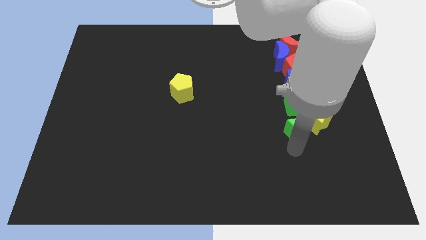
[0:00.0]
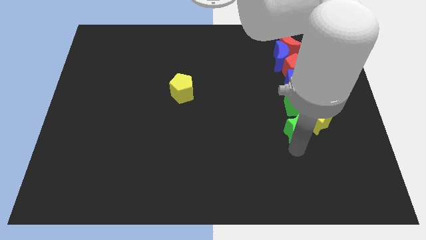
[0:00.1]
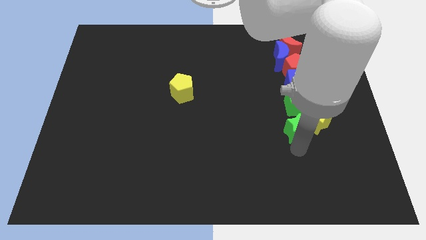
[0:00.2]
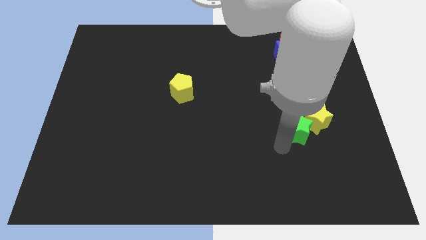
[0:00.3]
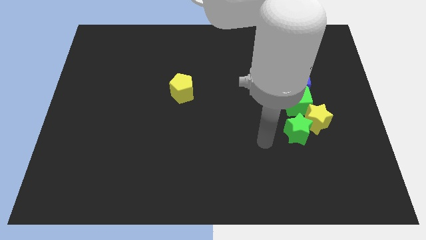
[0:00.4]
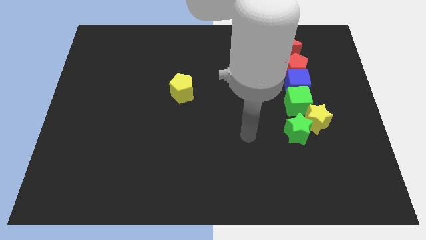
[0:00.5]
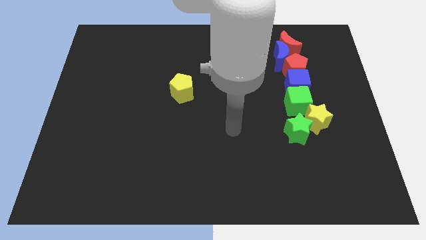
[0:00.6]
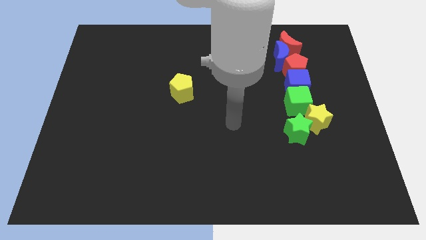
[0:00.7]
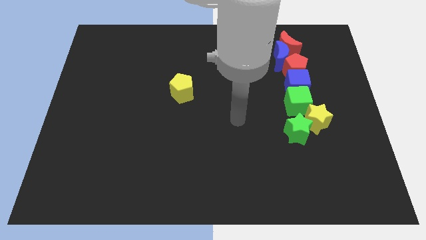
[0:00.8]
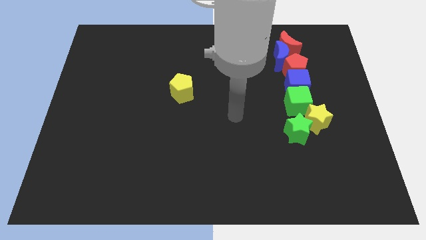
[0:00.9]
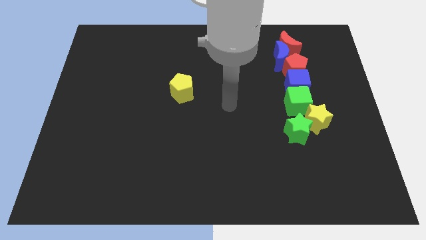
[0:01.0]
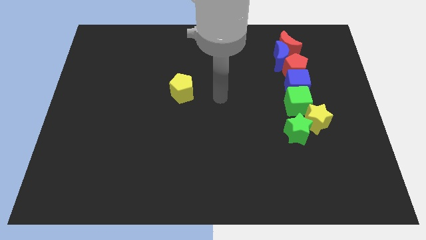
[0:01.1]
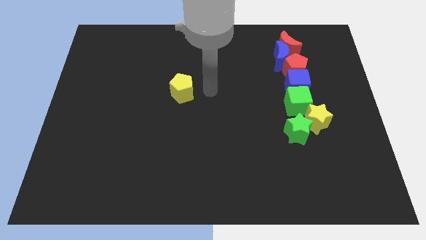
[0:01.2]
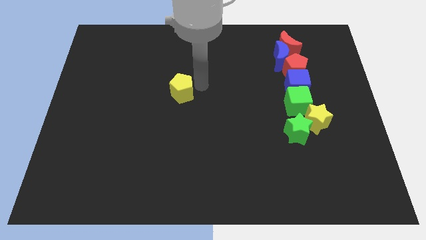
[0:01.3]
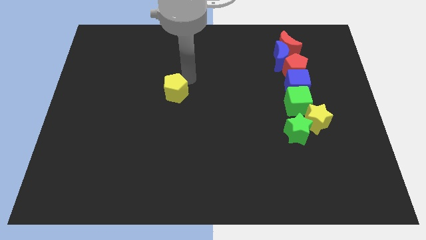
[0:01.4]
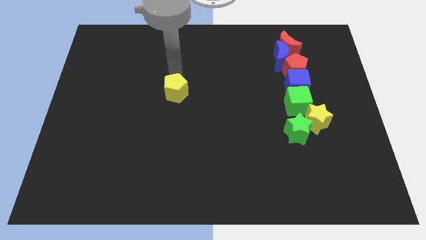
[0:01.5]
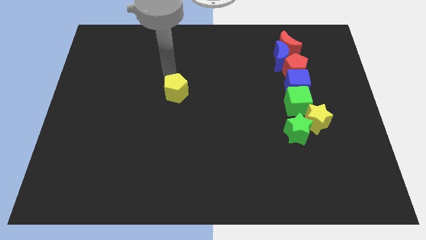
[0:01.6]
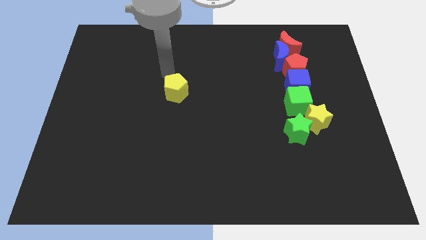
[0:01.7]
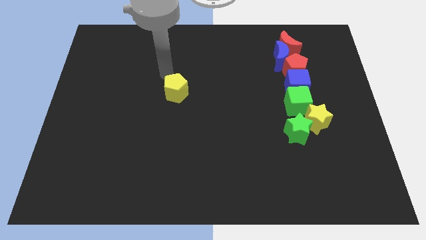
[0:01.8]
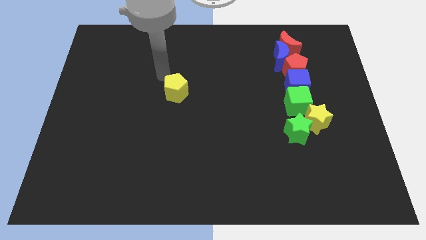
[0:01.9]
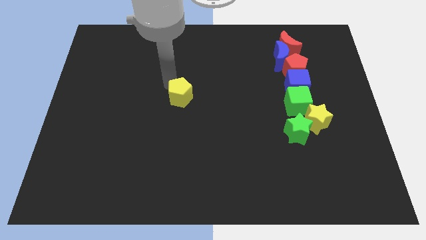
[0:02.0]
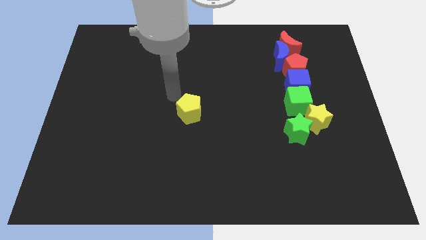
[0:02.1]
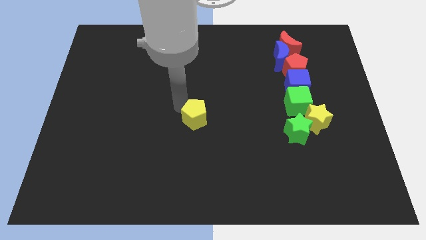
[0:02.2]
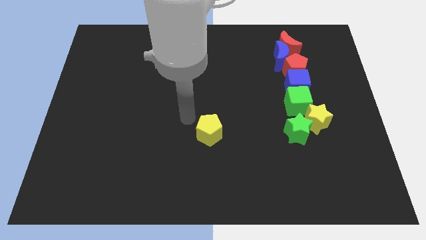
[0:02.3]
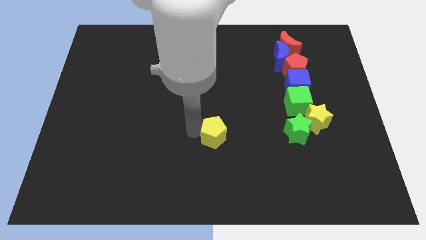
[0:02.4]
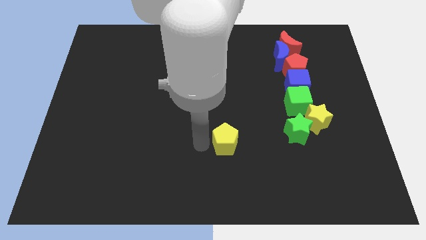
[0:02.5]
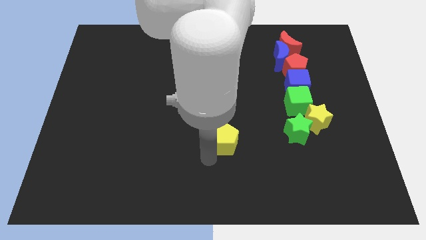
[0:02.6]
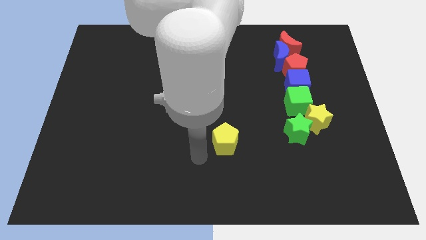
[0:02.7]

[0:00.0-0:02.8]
place the yellow pentagon left to the green star

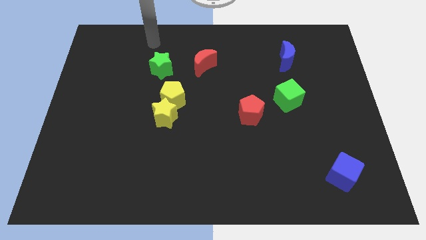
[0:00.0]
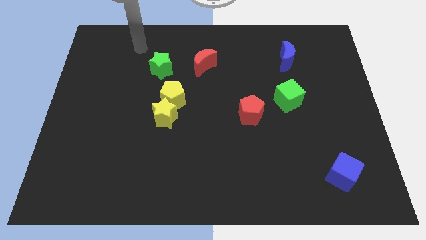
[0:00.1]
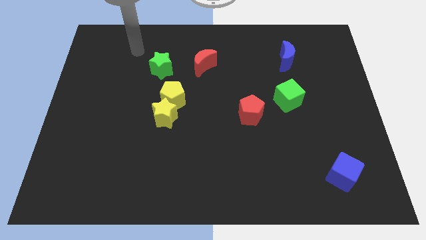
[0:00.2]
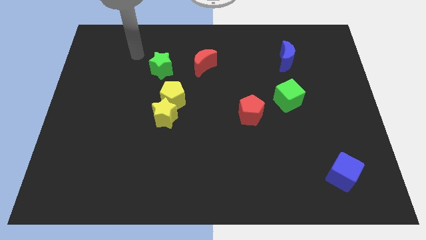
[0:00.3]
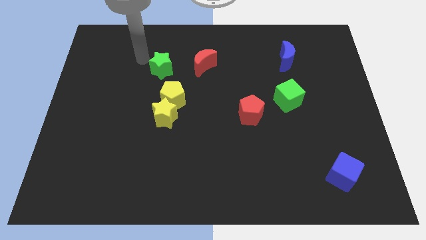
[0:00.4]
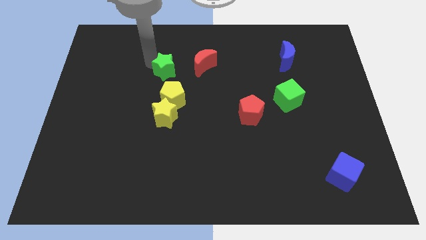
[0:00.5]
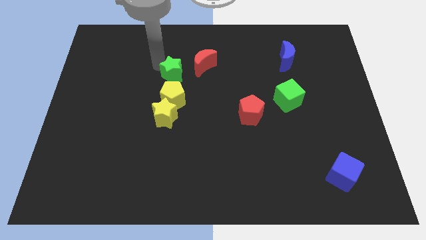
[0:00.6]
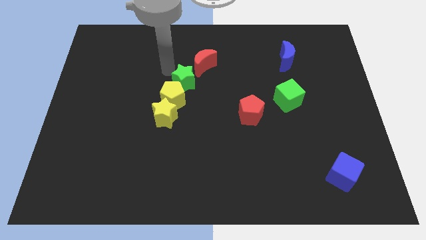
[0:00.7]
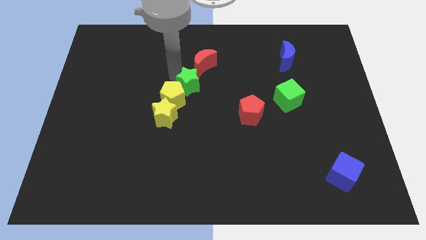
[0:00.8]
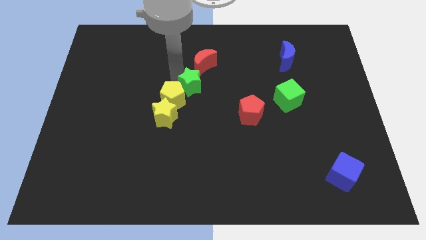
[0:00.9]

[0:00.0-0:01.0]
place green star in between red moon and yellow pentagon

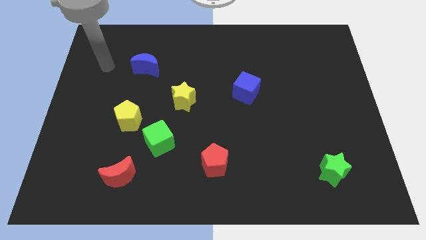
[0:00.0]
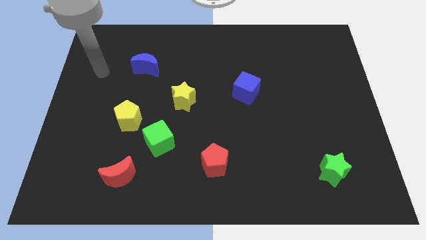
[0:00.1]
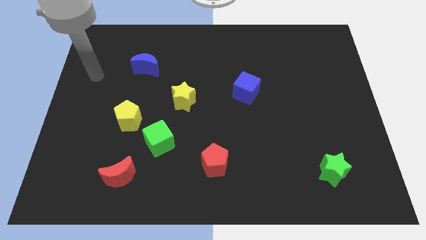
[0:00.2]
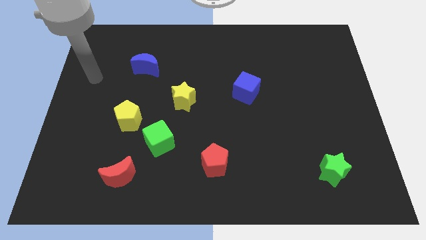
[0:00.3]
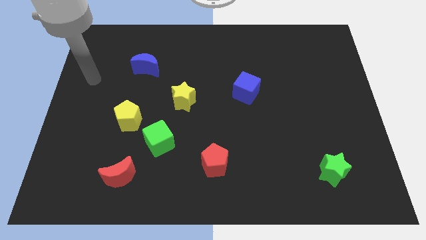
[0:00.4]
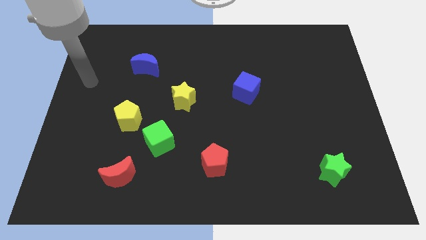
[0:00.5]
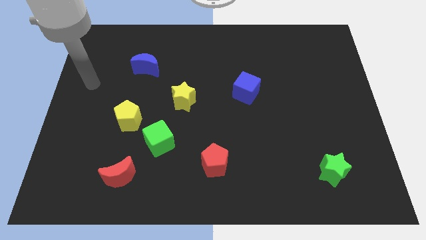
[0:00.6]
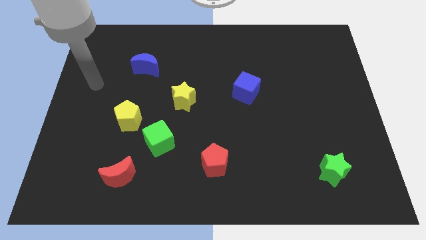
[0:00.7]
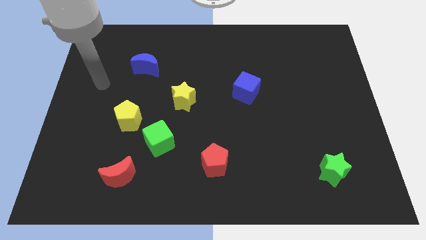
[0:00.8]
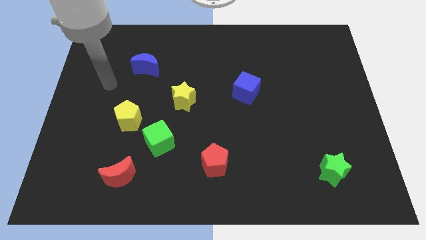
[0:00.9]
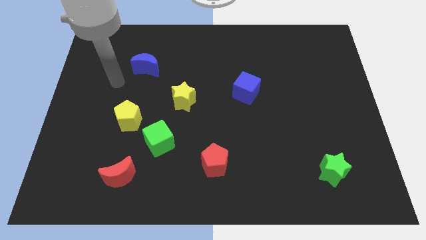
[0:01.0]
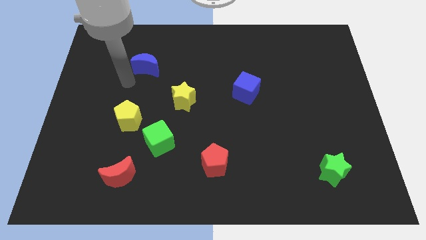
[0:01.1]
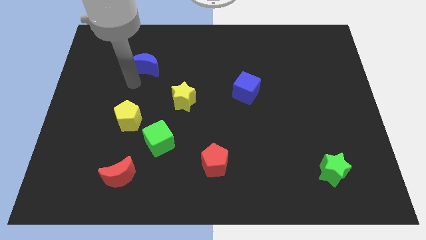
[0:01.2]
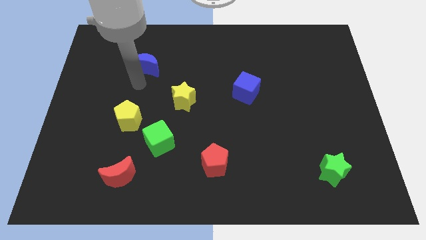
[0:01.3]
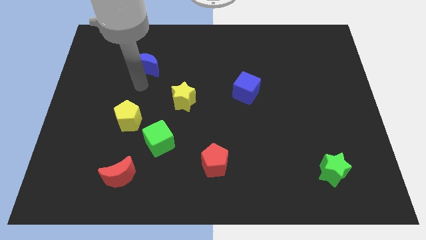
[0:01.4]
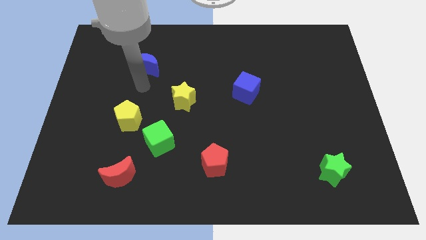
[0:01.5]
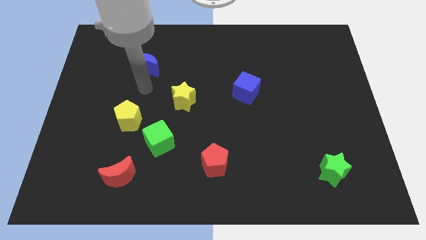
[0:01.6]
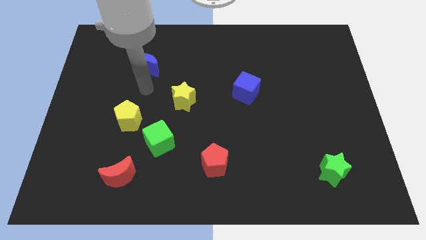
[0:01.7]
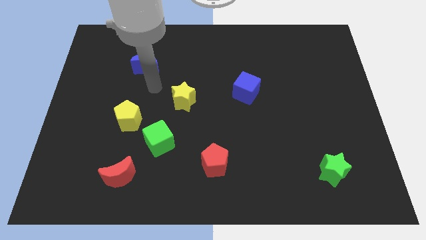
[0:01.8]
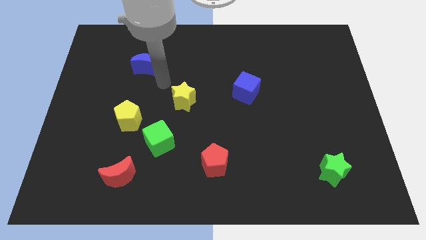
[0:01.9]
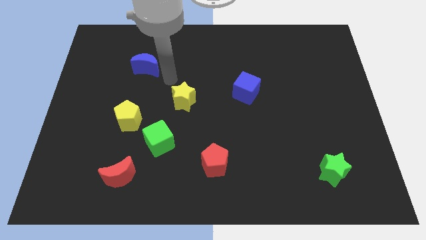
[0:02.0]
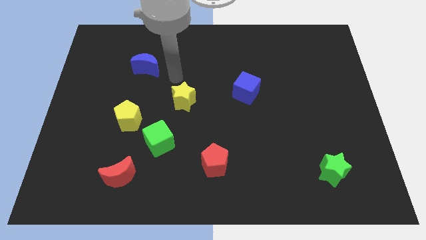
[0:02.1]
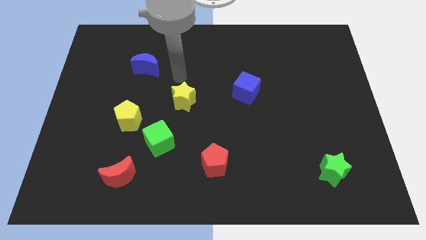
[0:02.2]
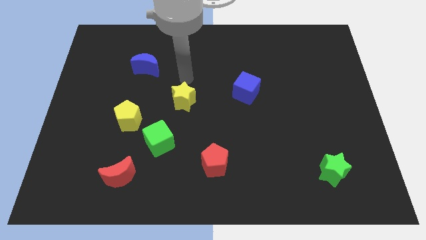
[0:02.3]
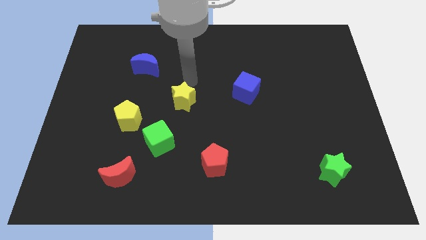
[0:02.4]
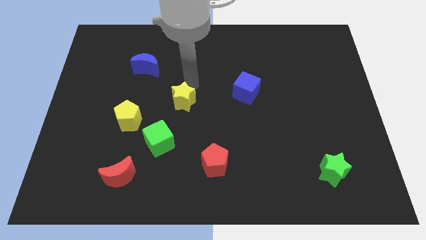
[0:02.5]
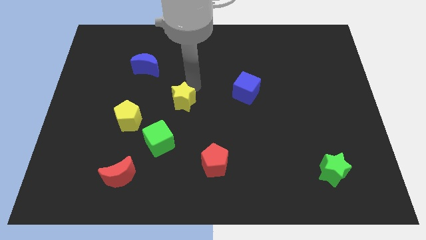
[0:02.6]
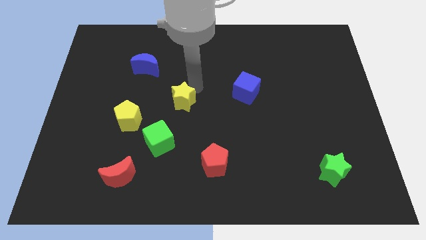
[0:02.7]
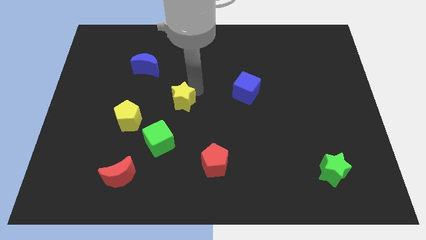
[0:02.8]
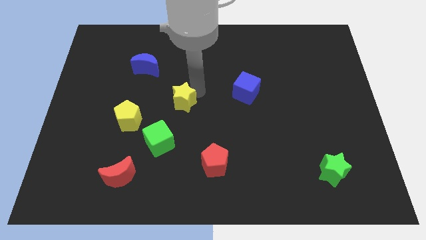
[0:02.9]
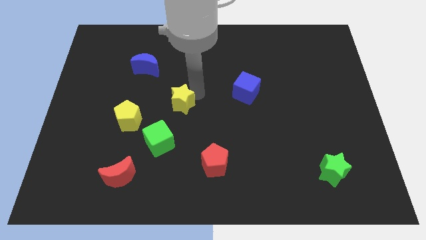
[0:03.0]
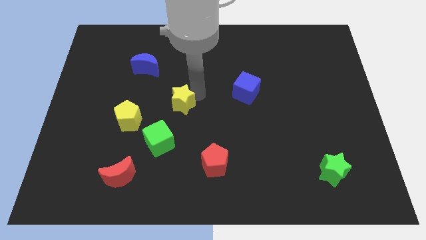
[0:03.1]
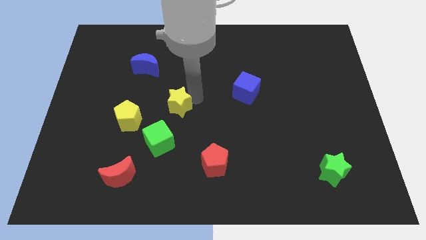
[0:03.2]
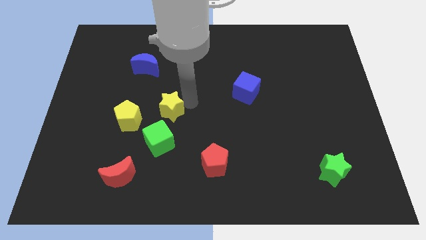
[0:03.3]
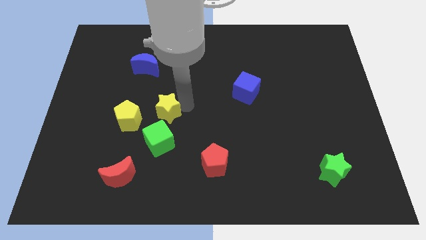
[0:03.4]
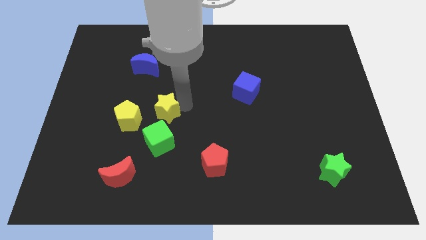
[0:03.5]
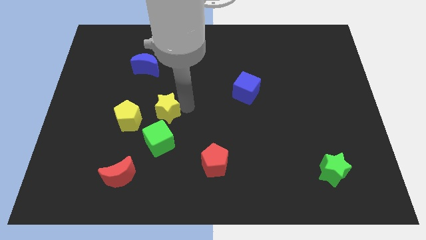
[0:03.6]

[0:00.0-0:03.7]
place the yellow star at the top of green cube

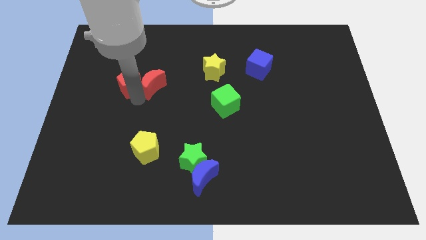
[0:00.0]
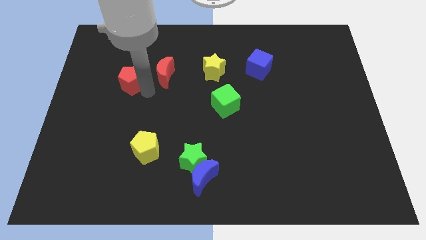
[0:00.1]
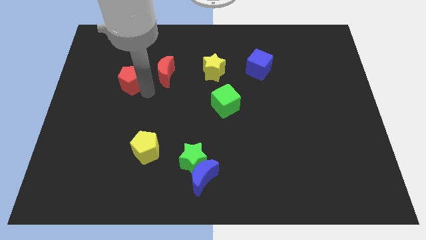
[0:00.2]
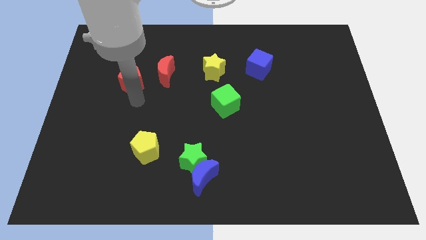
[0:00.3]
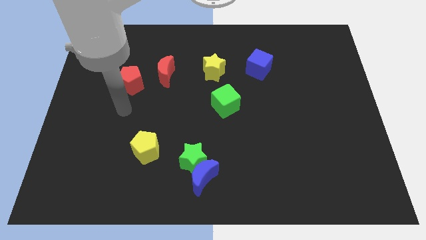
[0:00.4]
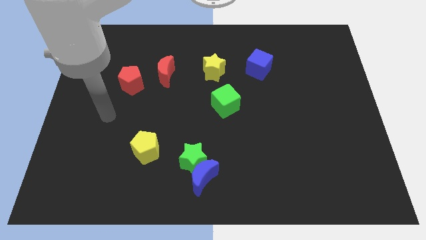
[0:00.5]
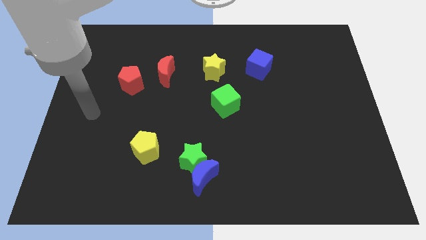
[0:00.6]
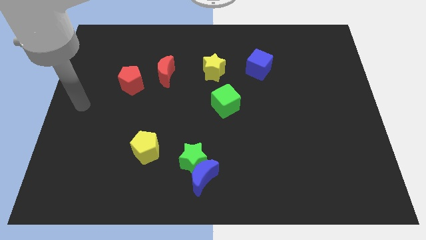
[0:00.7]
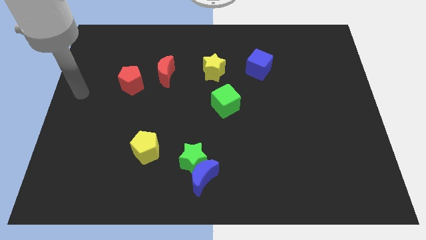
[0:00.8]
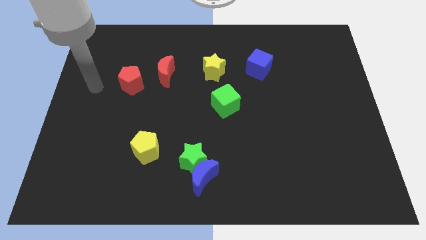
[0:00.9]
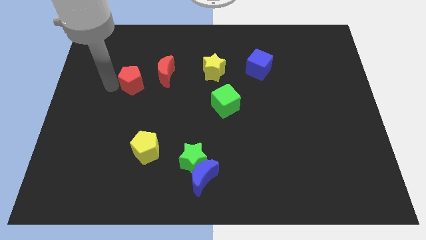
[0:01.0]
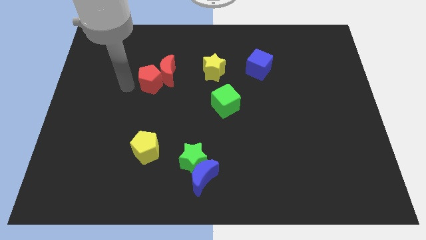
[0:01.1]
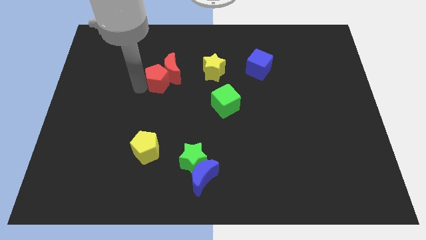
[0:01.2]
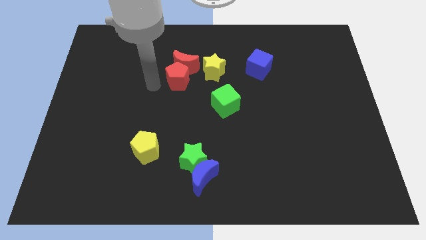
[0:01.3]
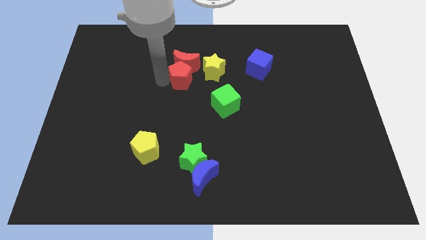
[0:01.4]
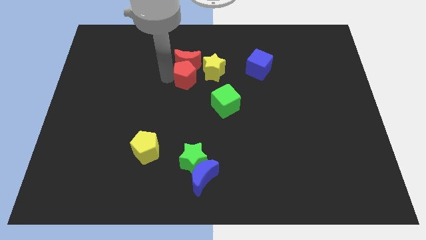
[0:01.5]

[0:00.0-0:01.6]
slide the red blocks towards the left side of the yellow star
